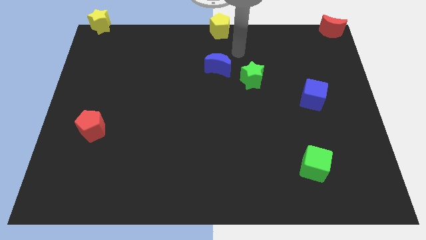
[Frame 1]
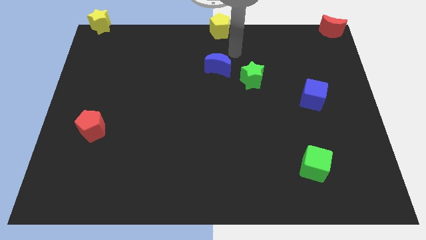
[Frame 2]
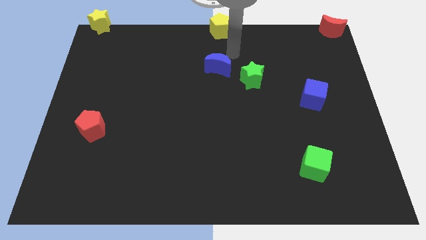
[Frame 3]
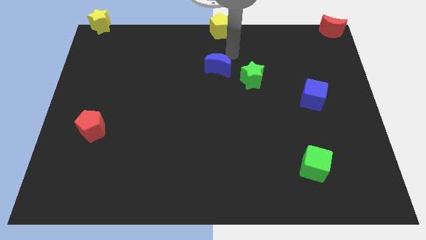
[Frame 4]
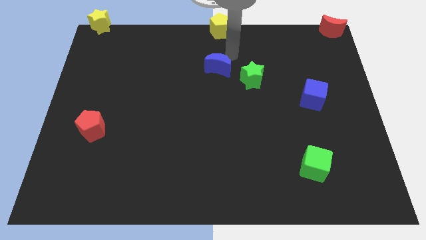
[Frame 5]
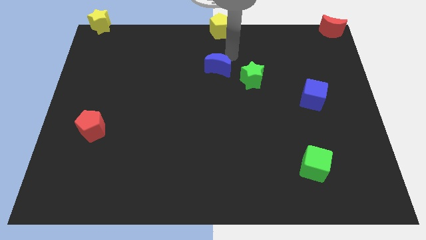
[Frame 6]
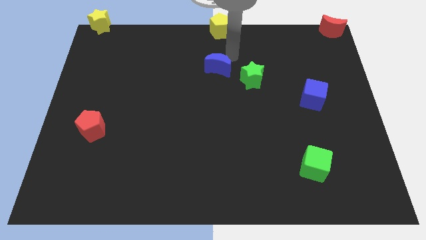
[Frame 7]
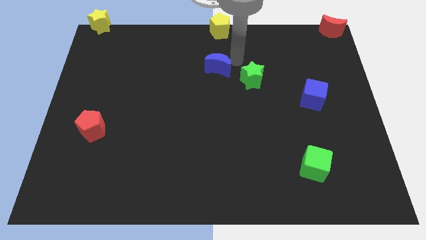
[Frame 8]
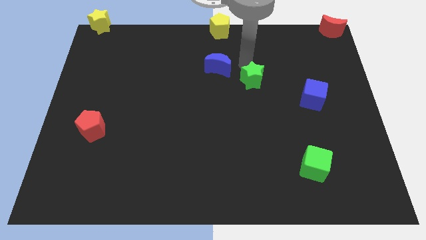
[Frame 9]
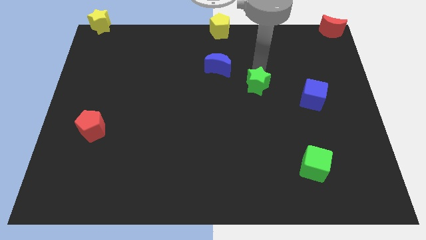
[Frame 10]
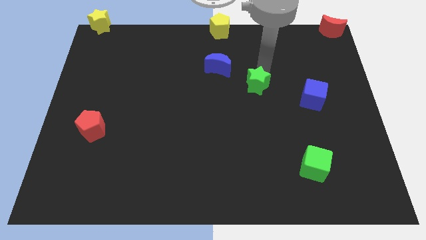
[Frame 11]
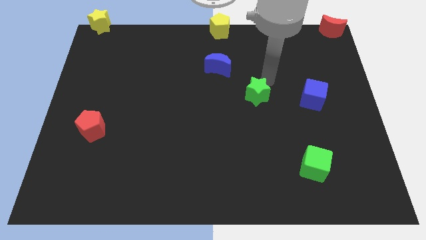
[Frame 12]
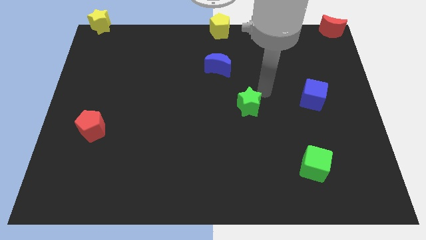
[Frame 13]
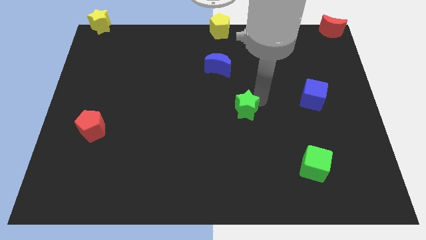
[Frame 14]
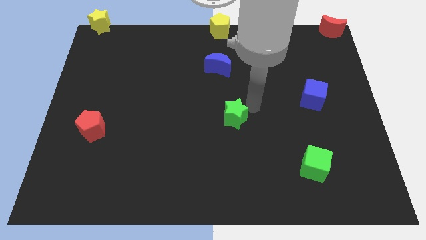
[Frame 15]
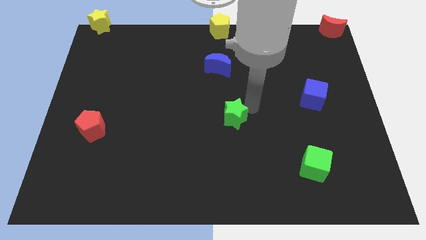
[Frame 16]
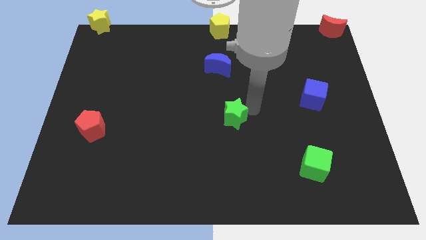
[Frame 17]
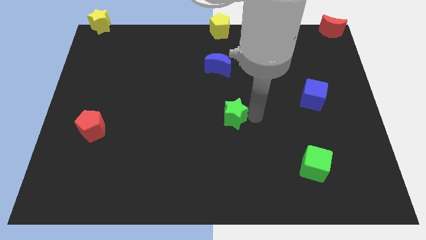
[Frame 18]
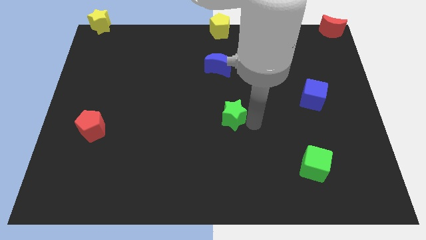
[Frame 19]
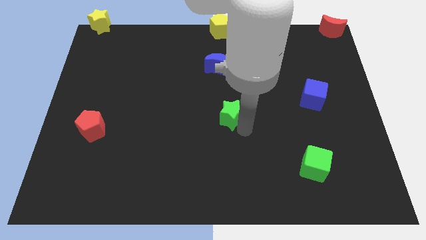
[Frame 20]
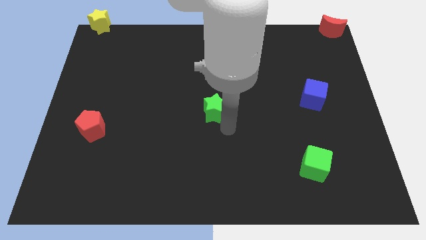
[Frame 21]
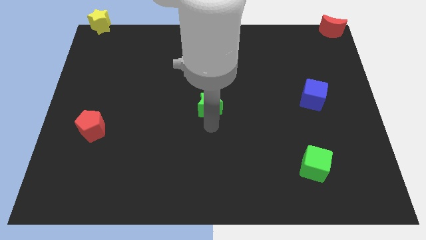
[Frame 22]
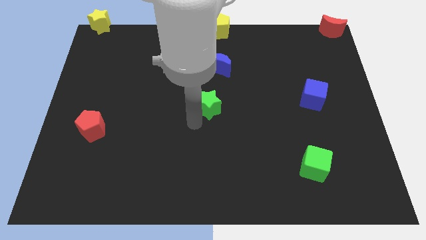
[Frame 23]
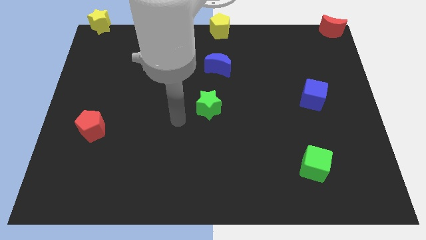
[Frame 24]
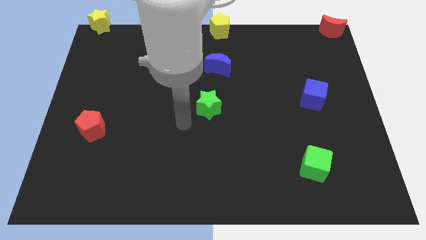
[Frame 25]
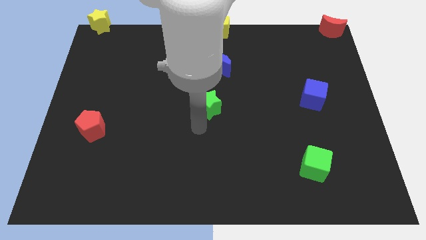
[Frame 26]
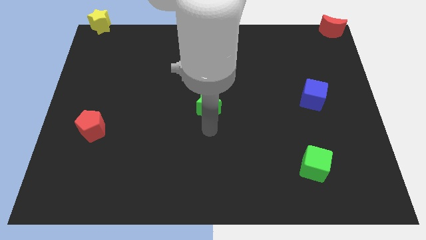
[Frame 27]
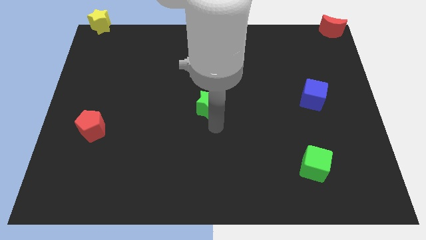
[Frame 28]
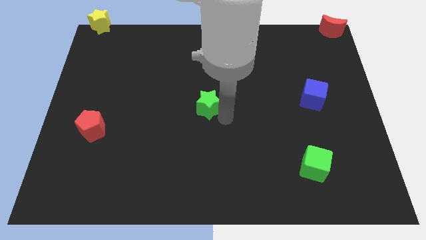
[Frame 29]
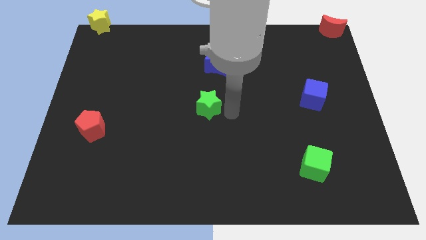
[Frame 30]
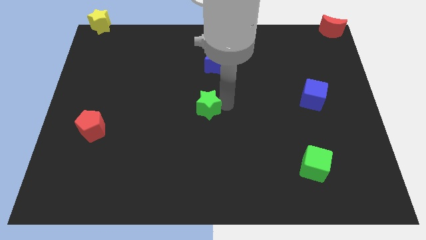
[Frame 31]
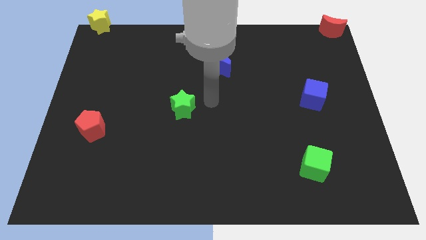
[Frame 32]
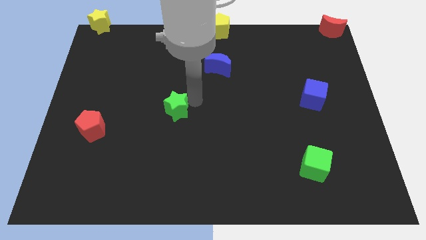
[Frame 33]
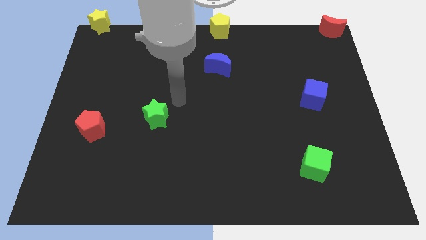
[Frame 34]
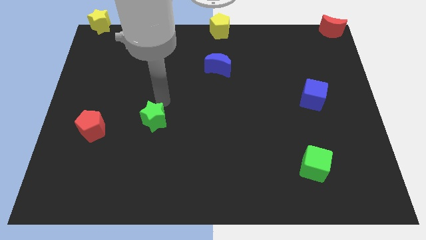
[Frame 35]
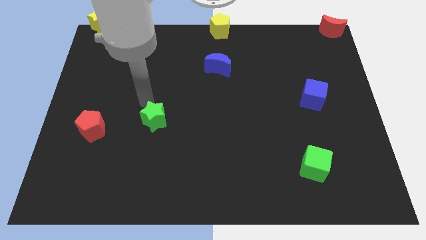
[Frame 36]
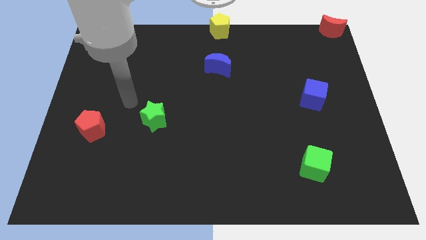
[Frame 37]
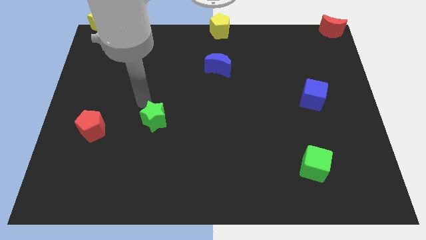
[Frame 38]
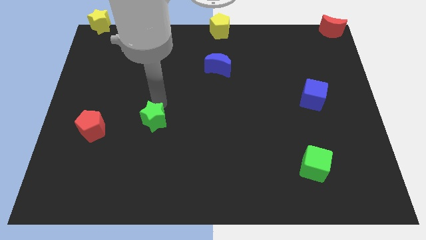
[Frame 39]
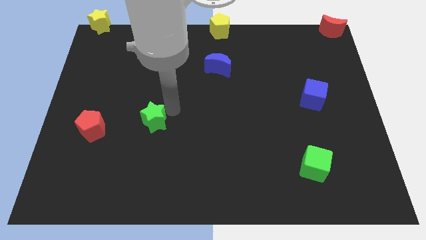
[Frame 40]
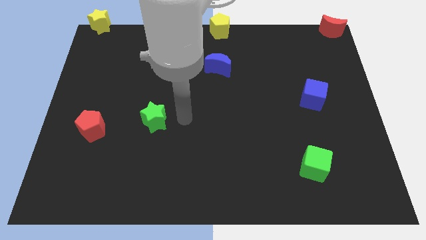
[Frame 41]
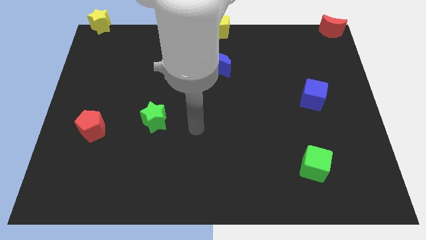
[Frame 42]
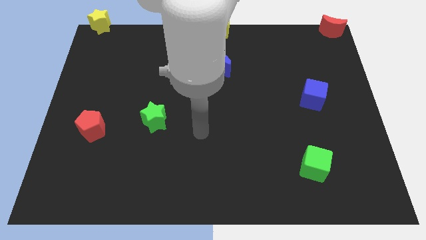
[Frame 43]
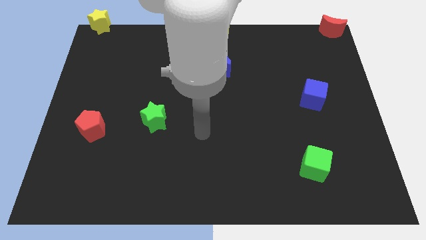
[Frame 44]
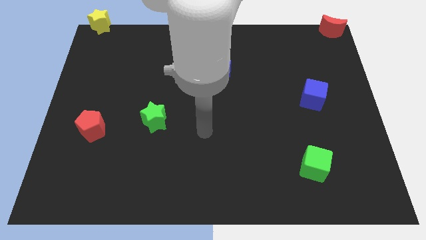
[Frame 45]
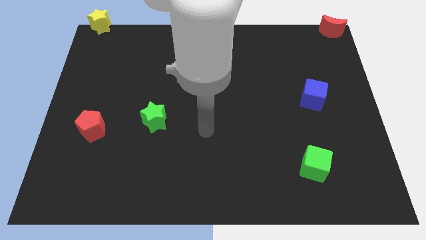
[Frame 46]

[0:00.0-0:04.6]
slide green star diagonal to the blue moon

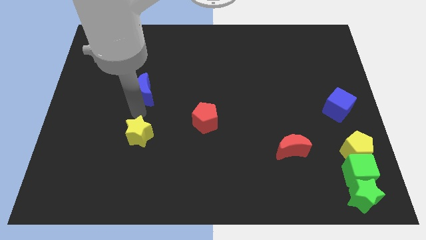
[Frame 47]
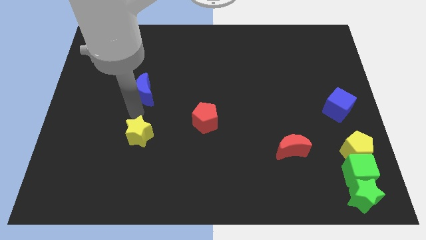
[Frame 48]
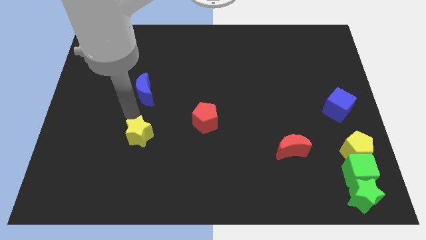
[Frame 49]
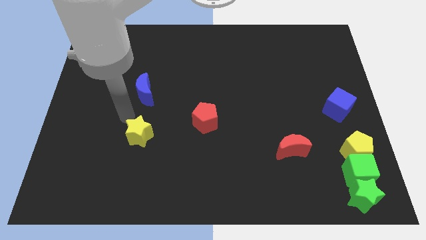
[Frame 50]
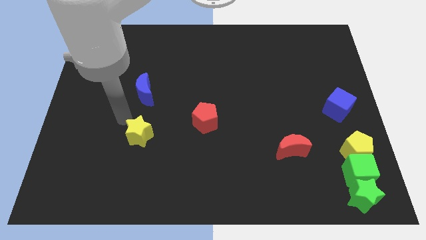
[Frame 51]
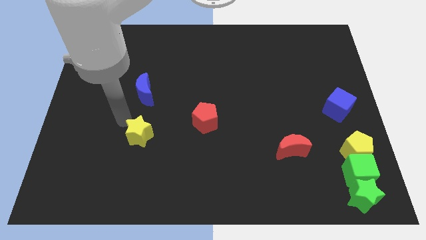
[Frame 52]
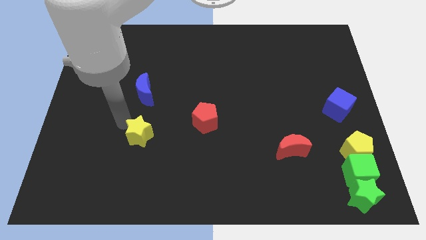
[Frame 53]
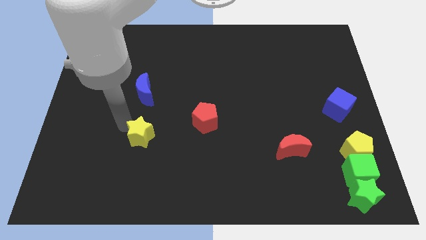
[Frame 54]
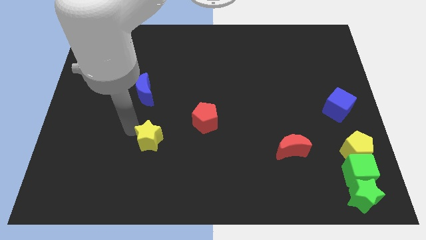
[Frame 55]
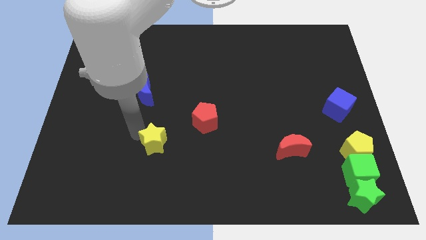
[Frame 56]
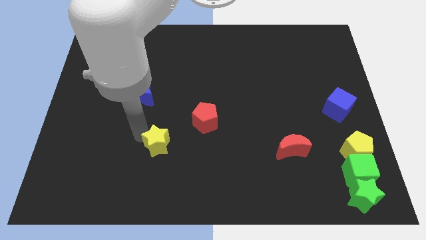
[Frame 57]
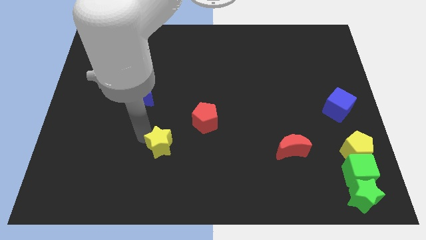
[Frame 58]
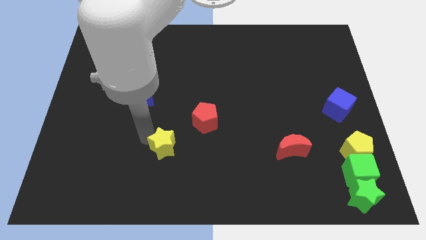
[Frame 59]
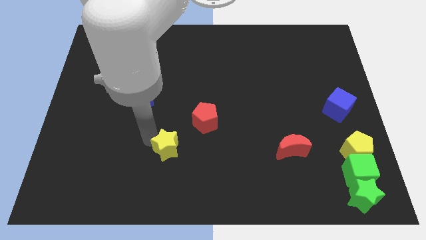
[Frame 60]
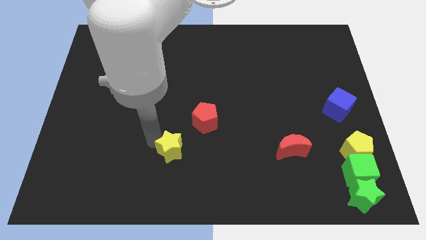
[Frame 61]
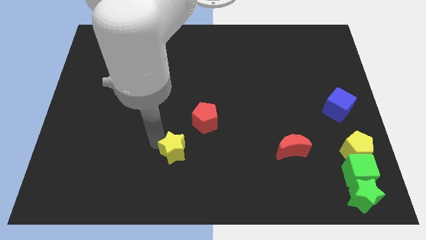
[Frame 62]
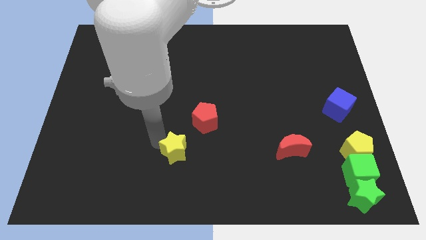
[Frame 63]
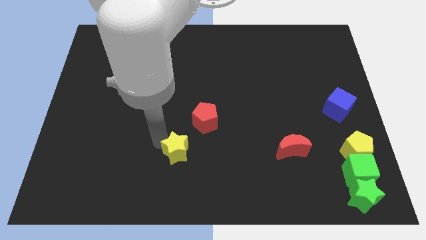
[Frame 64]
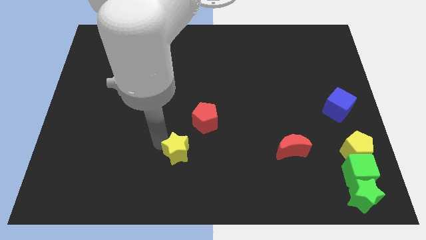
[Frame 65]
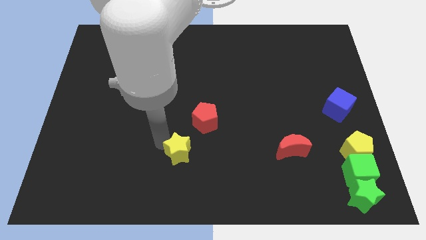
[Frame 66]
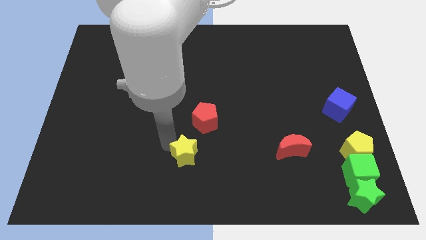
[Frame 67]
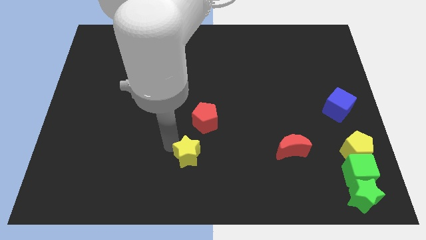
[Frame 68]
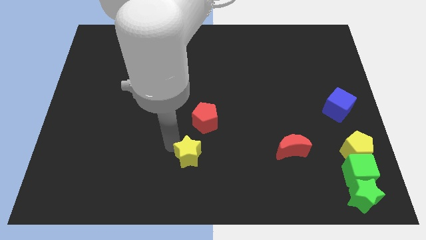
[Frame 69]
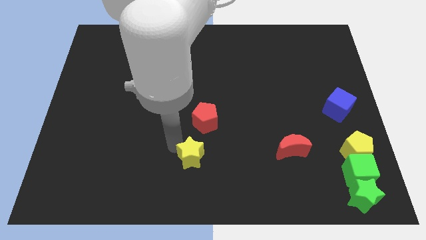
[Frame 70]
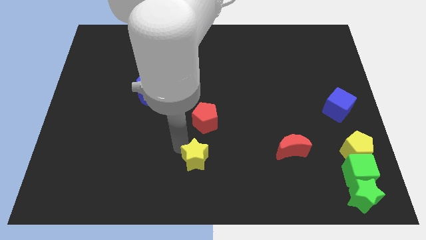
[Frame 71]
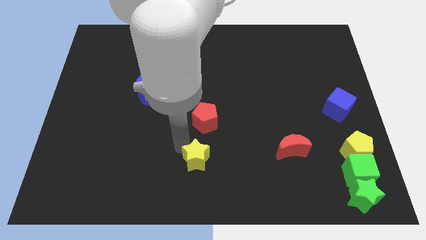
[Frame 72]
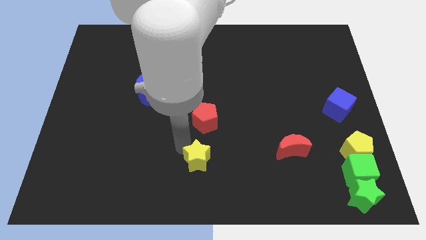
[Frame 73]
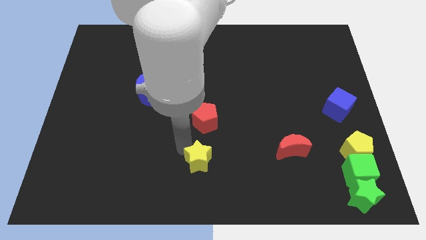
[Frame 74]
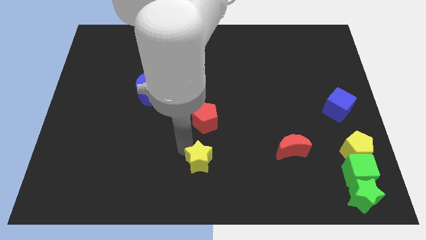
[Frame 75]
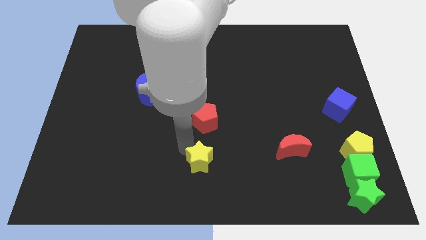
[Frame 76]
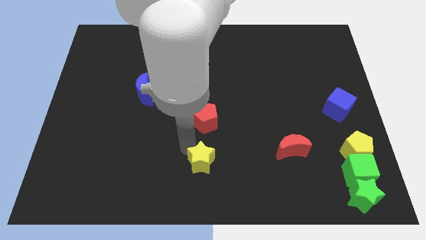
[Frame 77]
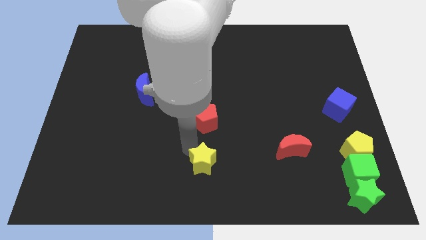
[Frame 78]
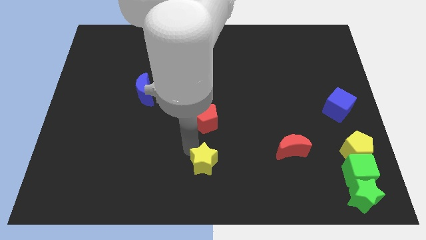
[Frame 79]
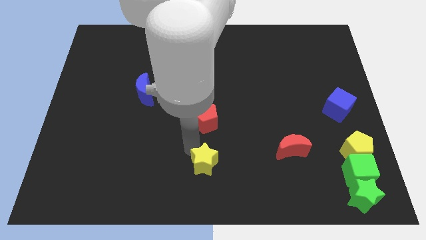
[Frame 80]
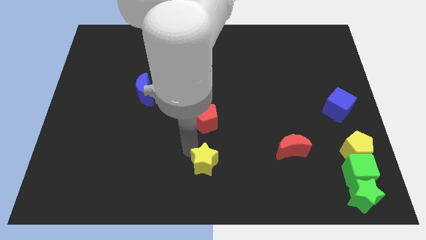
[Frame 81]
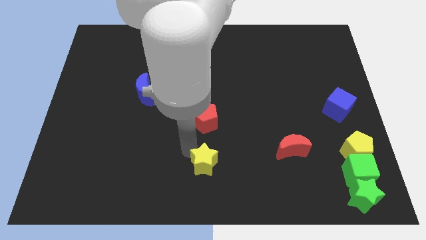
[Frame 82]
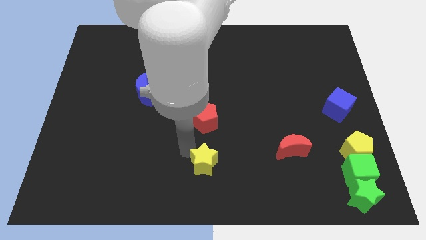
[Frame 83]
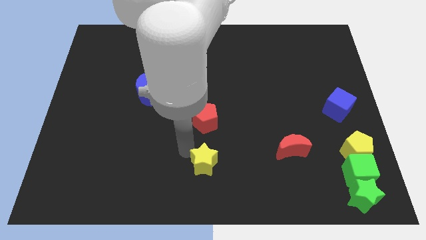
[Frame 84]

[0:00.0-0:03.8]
put the yellow star below the red pentagon

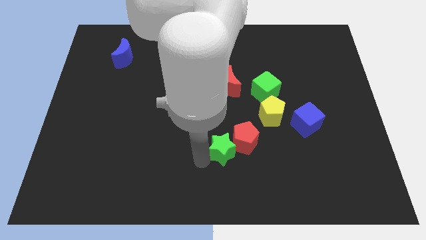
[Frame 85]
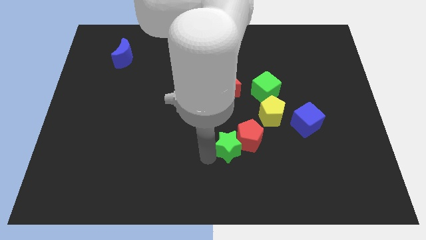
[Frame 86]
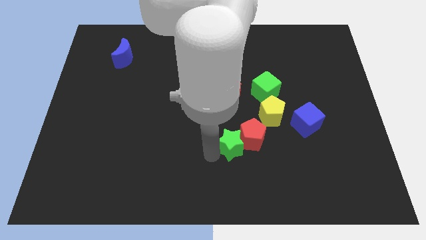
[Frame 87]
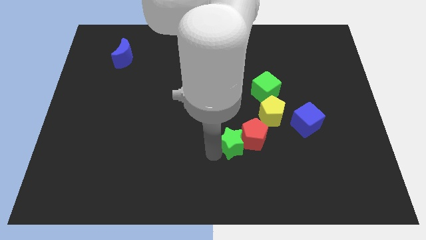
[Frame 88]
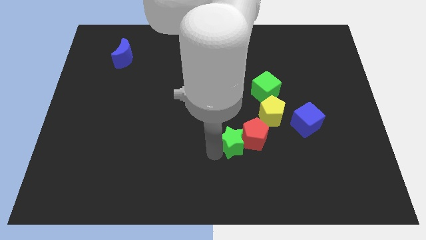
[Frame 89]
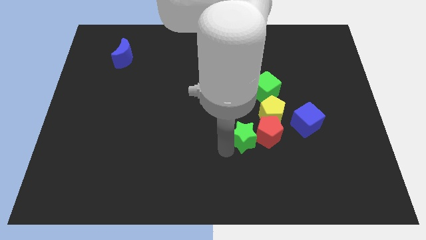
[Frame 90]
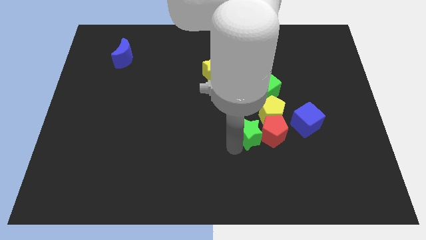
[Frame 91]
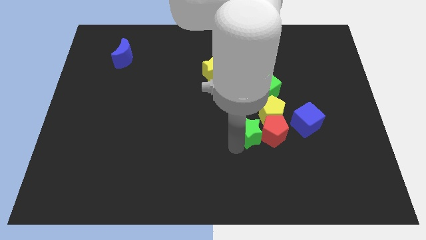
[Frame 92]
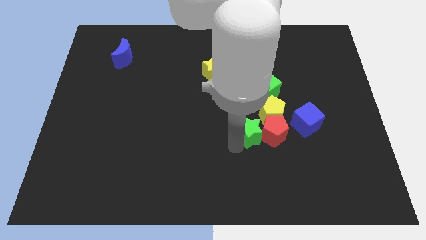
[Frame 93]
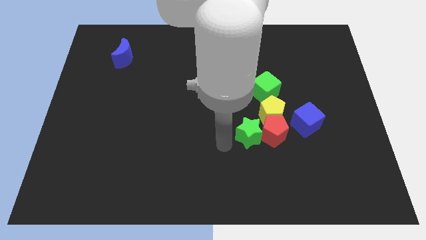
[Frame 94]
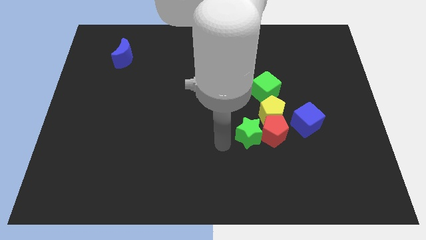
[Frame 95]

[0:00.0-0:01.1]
move the red pentagon and green star below the yellow pentagon
